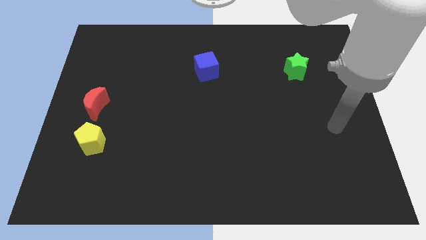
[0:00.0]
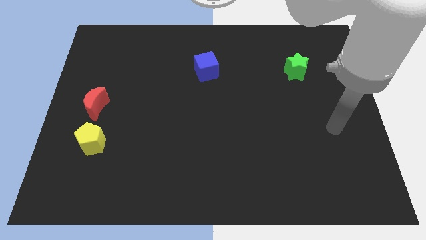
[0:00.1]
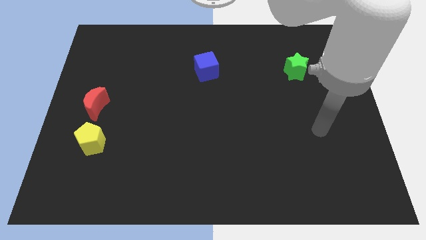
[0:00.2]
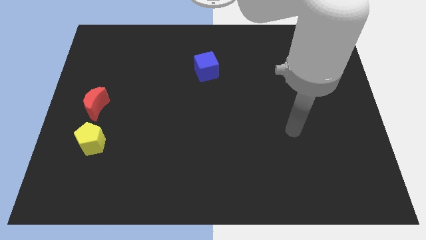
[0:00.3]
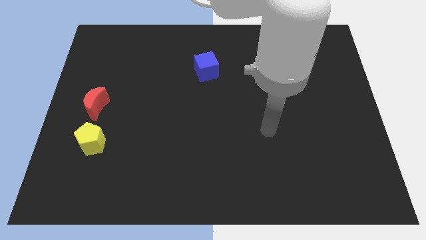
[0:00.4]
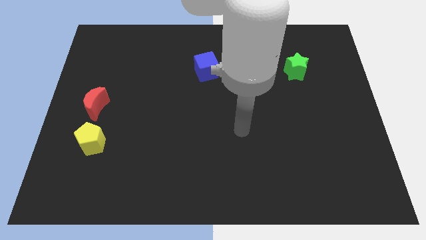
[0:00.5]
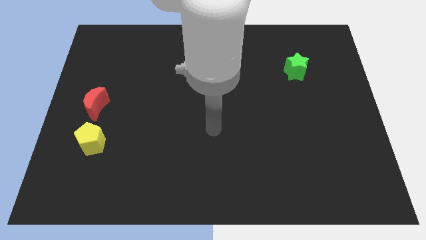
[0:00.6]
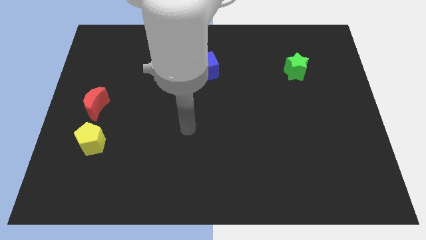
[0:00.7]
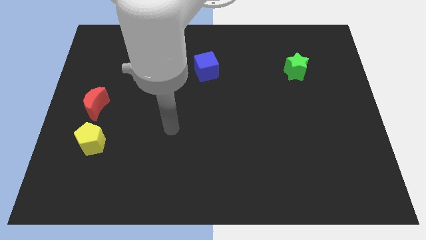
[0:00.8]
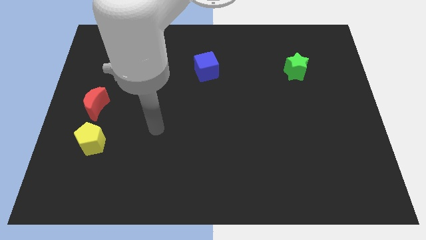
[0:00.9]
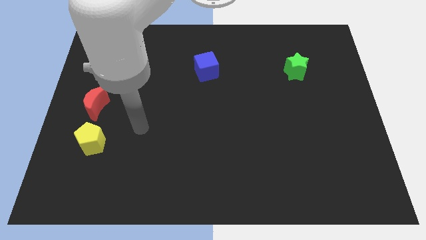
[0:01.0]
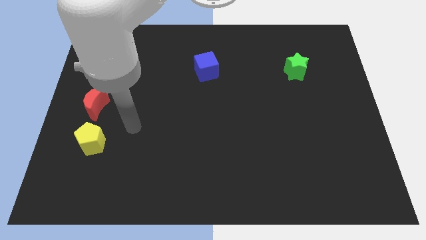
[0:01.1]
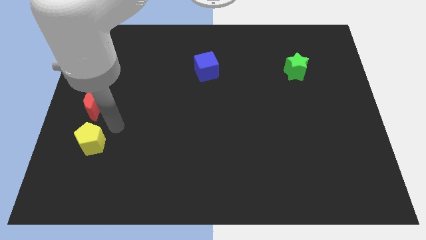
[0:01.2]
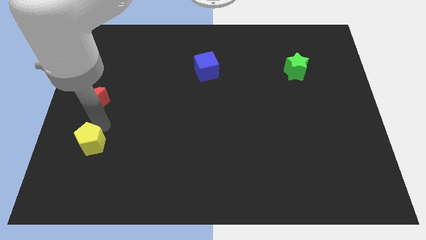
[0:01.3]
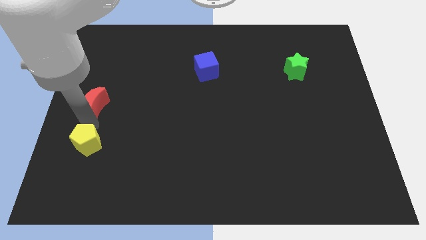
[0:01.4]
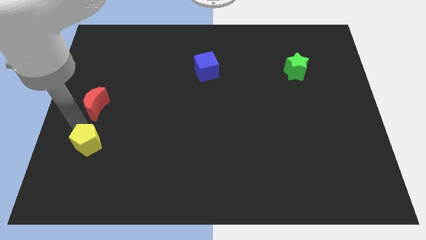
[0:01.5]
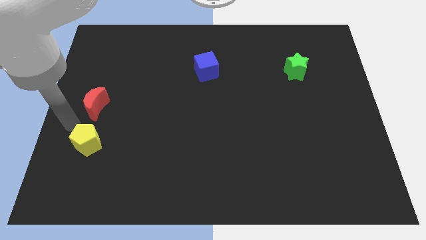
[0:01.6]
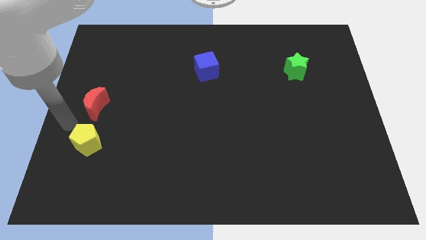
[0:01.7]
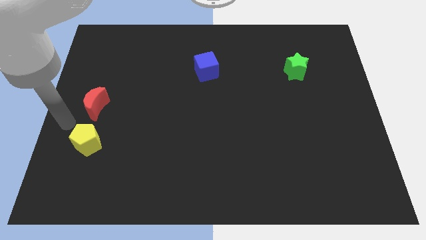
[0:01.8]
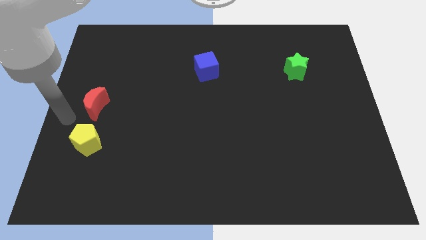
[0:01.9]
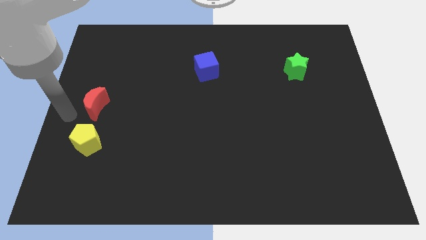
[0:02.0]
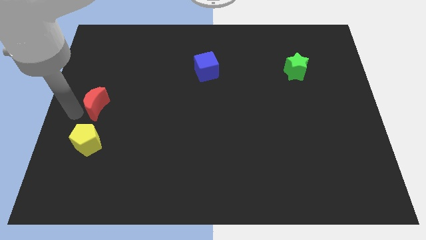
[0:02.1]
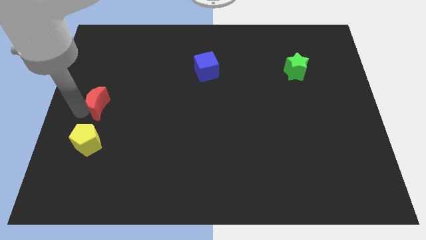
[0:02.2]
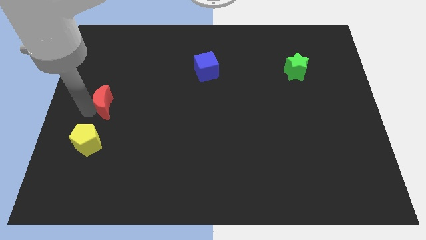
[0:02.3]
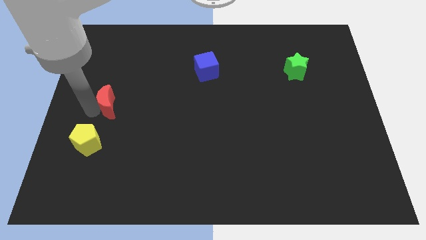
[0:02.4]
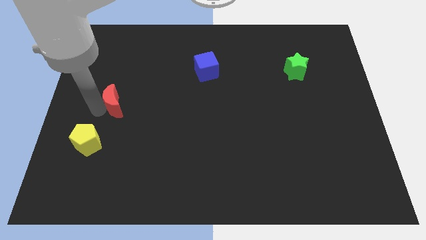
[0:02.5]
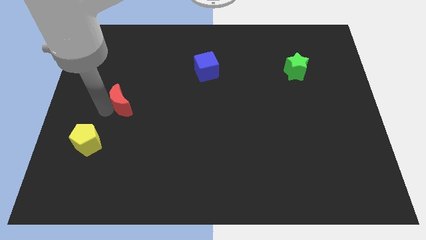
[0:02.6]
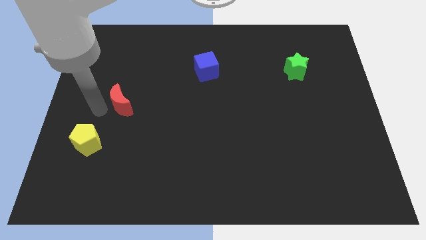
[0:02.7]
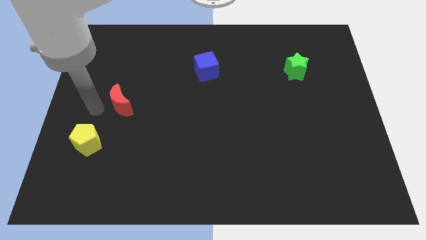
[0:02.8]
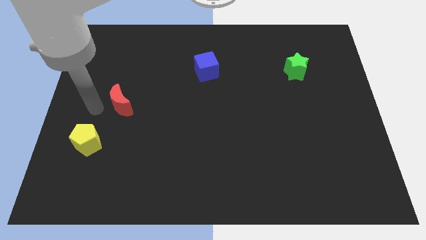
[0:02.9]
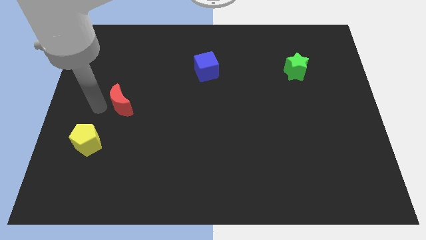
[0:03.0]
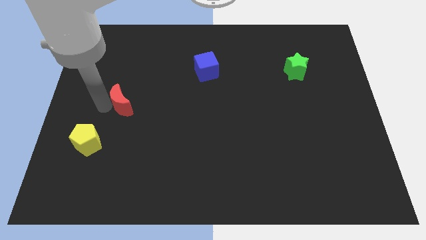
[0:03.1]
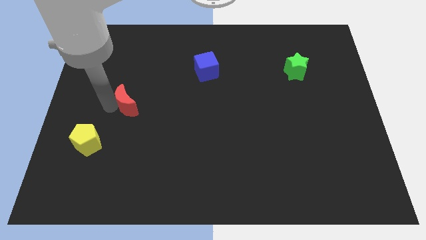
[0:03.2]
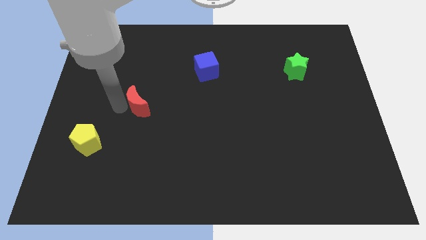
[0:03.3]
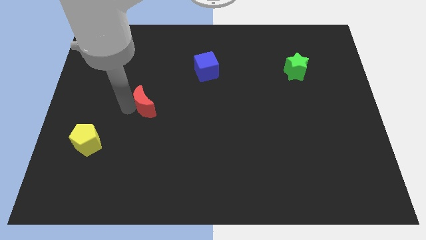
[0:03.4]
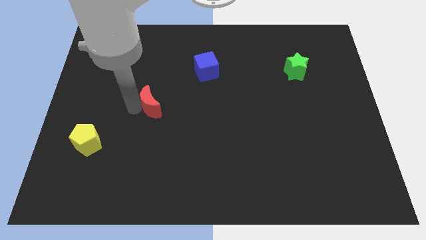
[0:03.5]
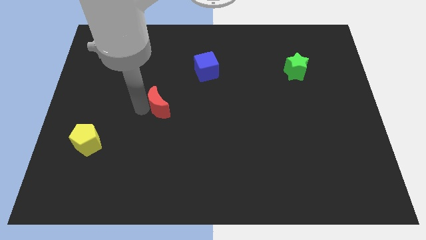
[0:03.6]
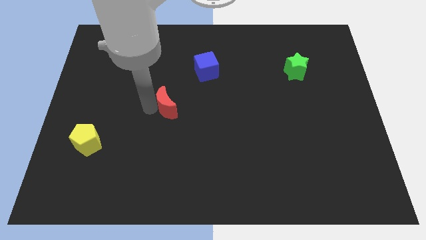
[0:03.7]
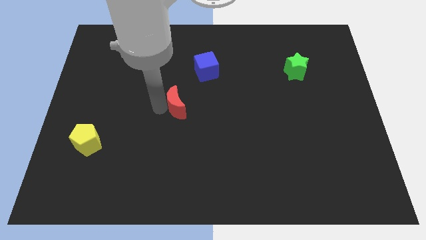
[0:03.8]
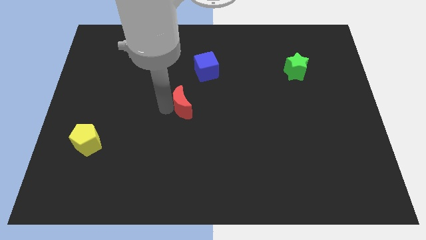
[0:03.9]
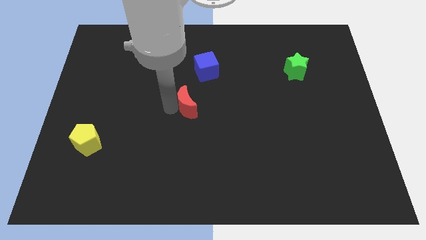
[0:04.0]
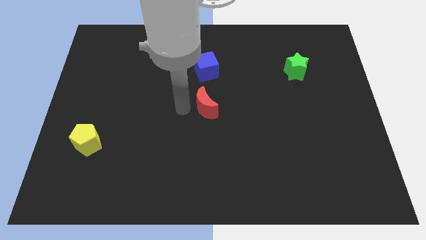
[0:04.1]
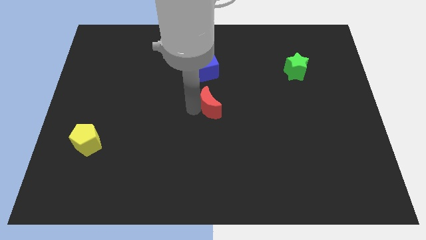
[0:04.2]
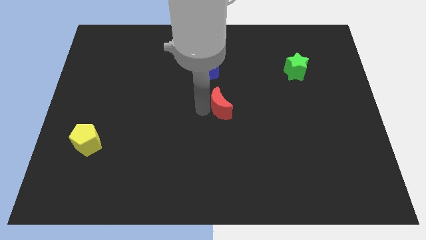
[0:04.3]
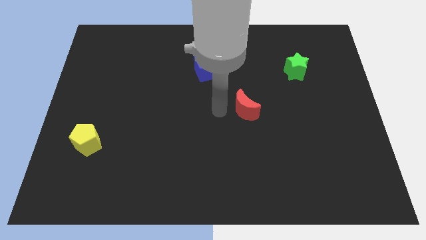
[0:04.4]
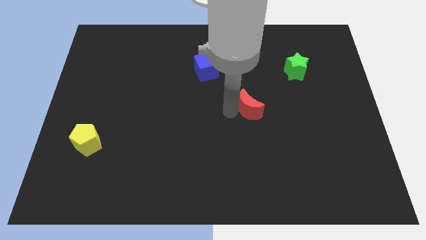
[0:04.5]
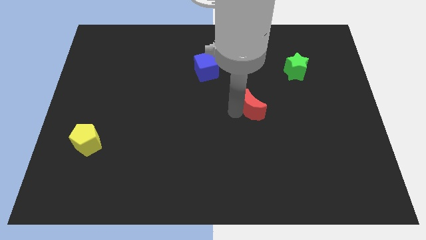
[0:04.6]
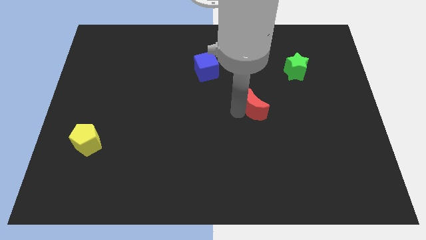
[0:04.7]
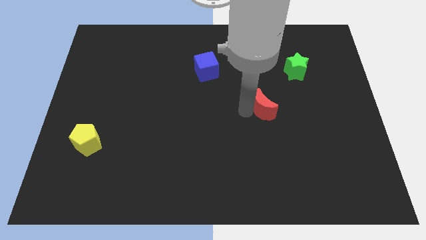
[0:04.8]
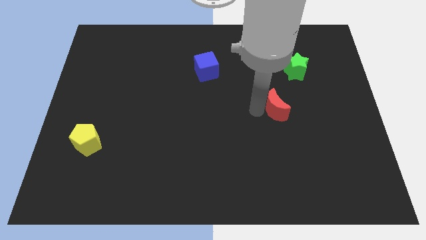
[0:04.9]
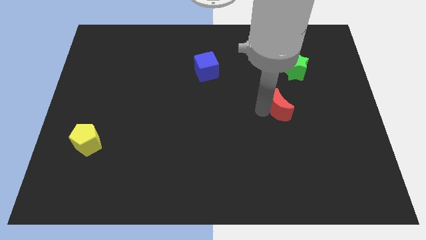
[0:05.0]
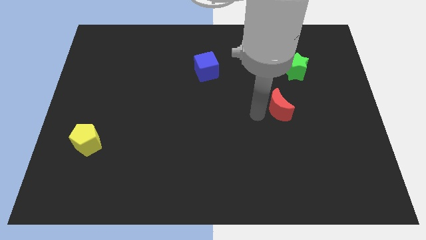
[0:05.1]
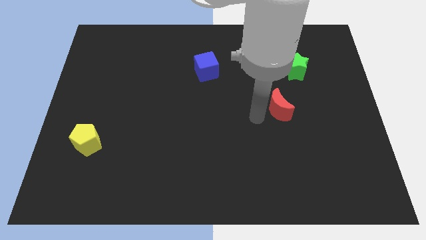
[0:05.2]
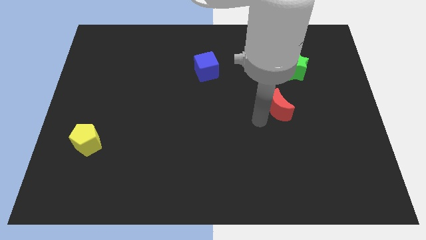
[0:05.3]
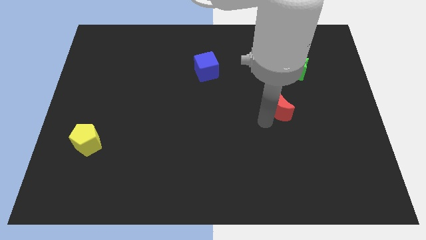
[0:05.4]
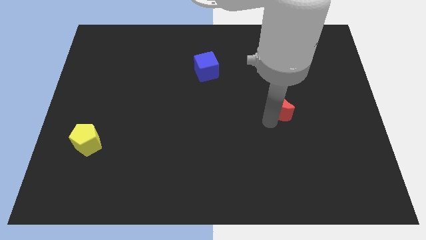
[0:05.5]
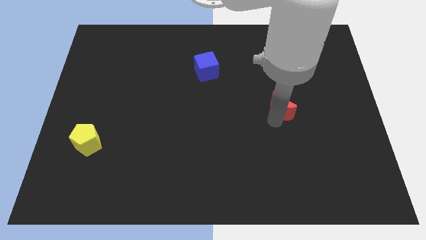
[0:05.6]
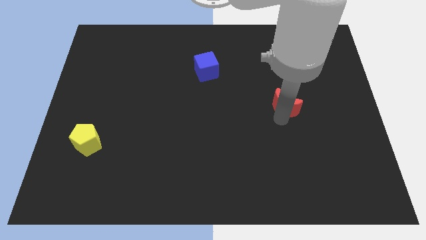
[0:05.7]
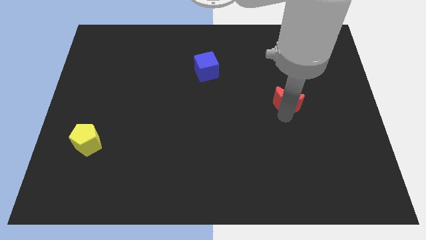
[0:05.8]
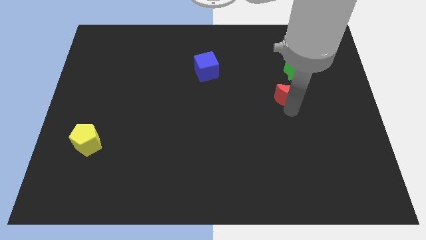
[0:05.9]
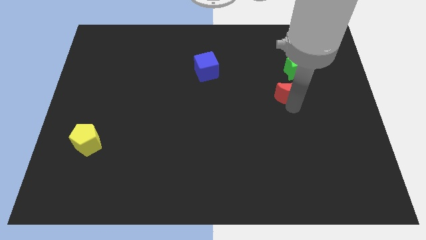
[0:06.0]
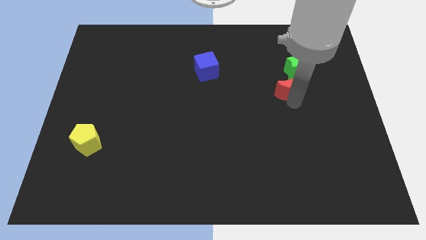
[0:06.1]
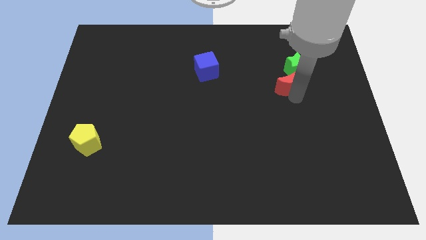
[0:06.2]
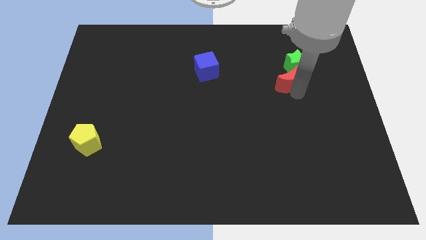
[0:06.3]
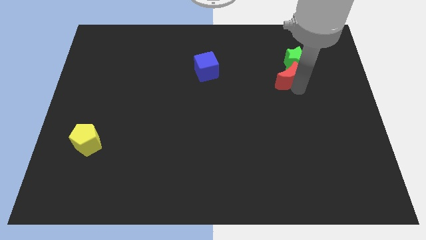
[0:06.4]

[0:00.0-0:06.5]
slide the red moon to the green block

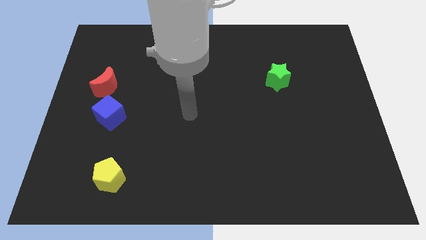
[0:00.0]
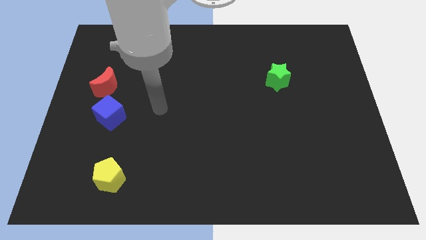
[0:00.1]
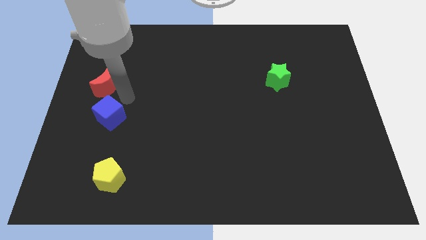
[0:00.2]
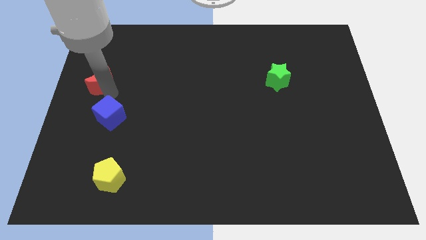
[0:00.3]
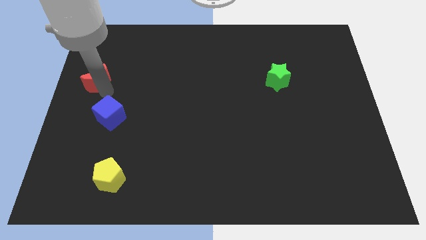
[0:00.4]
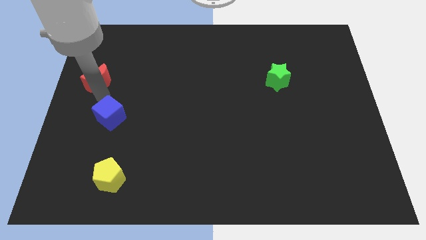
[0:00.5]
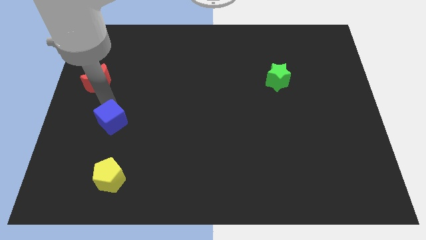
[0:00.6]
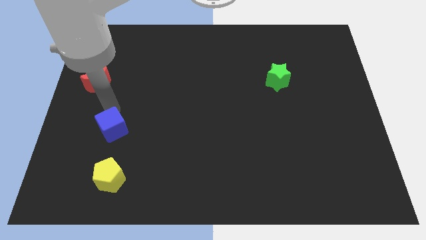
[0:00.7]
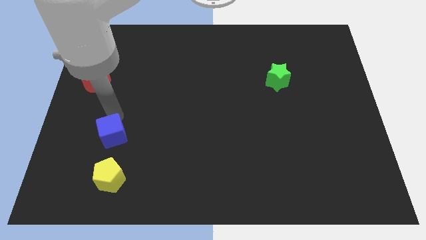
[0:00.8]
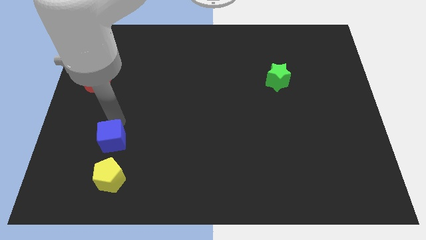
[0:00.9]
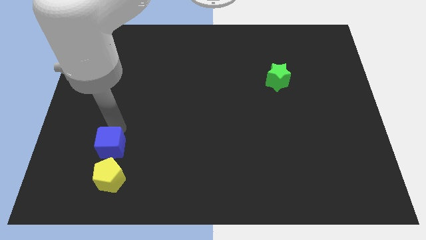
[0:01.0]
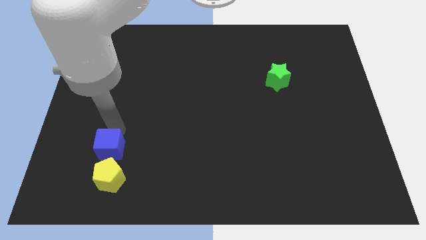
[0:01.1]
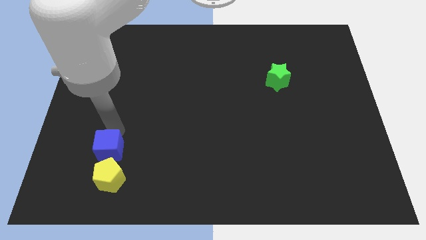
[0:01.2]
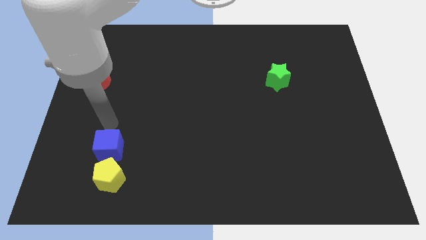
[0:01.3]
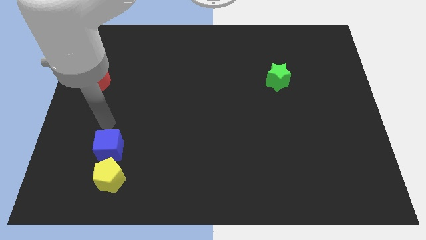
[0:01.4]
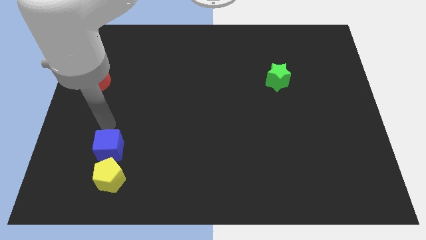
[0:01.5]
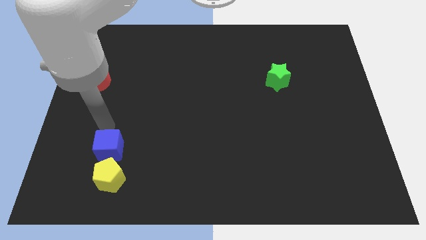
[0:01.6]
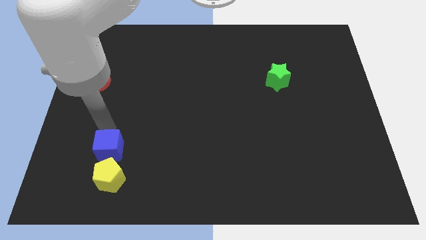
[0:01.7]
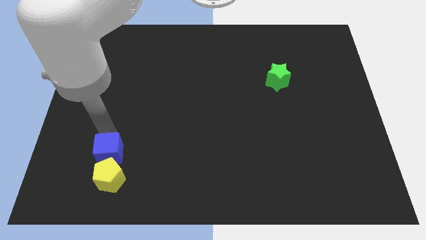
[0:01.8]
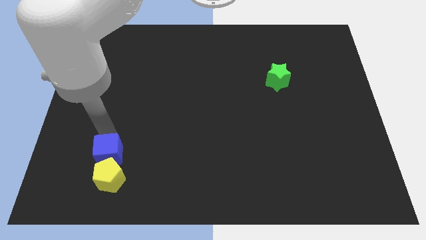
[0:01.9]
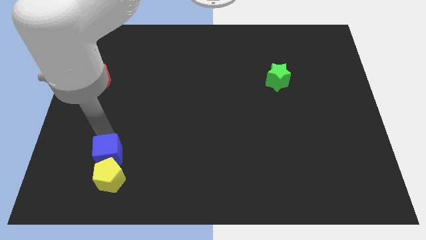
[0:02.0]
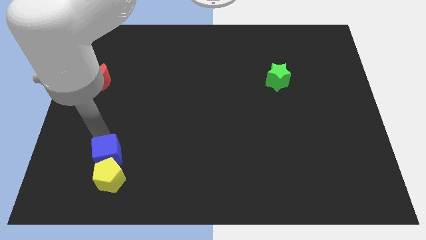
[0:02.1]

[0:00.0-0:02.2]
move the blue cube to the yellow block
